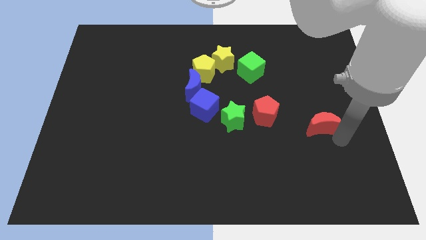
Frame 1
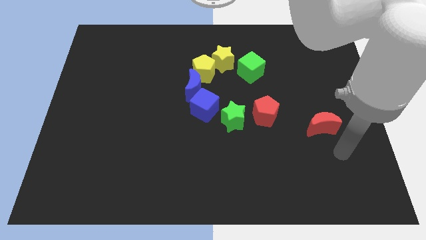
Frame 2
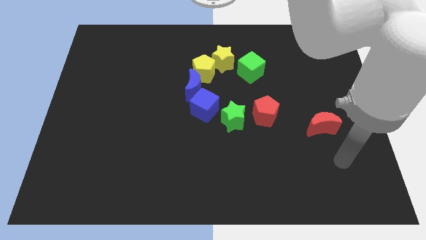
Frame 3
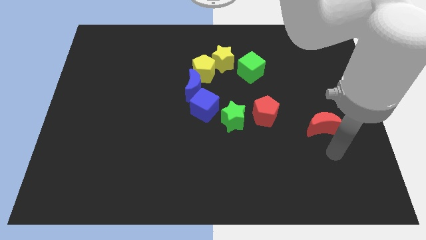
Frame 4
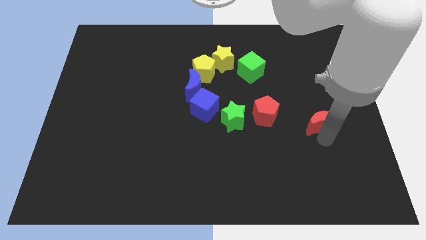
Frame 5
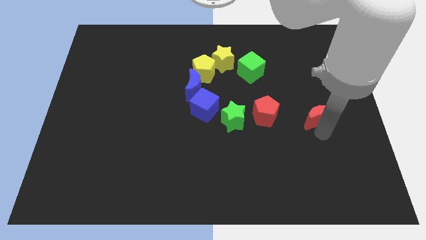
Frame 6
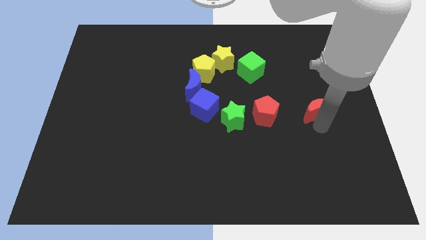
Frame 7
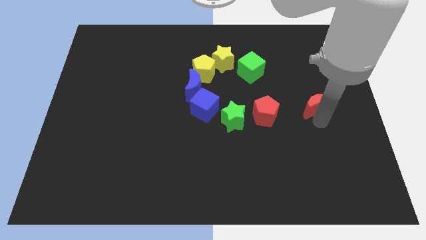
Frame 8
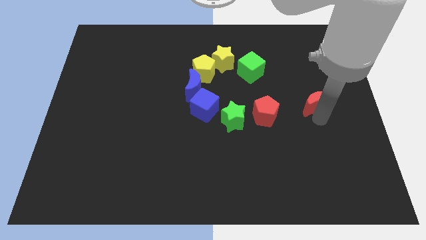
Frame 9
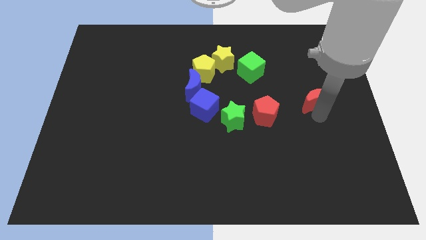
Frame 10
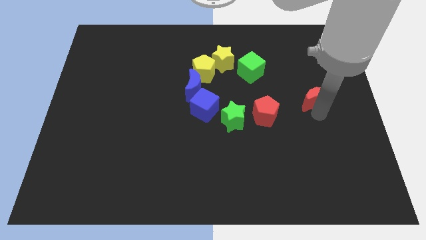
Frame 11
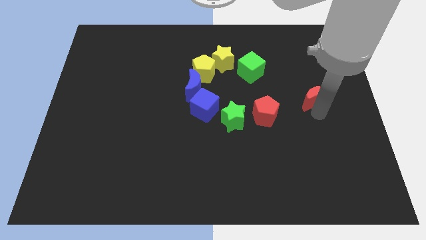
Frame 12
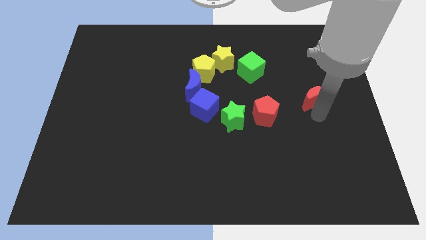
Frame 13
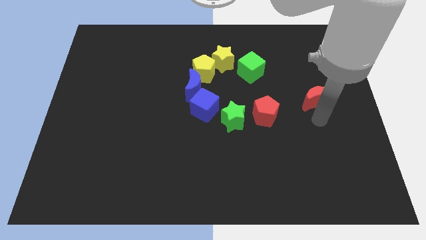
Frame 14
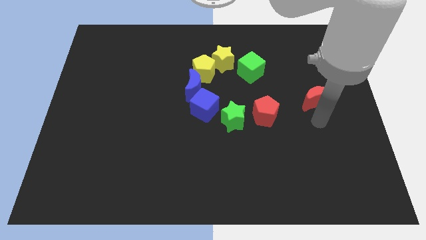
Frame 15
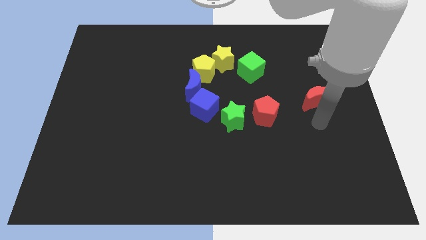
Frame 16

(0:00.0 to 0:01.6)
push the red crescent slightly upwards

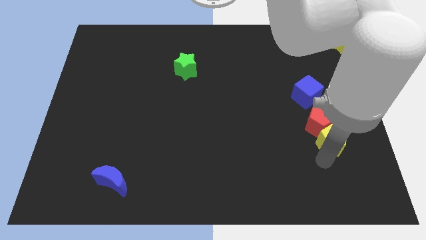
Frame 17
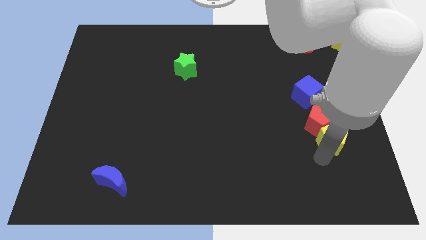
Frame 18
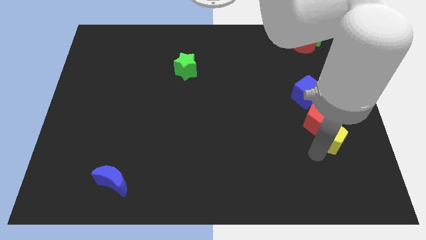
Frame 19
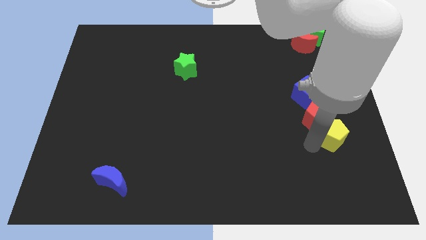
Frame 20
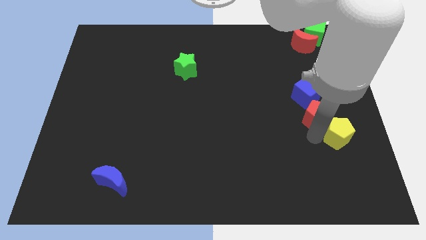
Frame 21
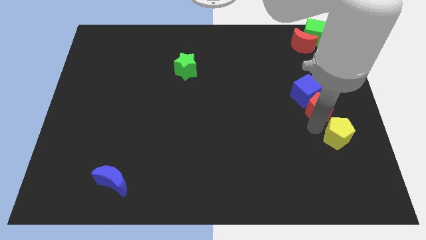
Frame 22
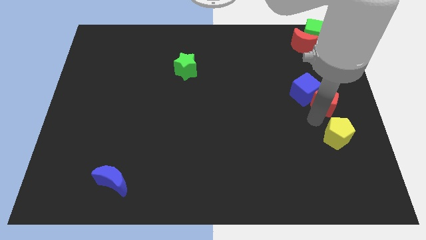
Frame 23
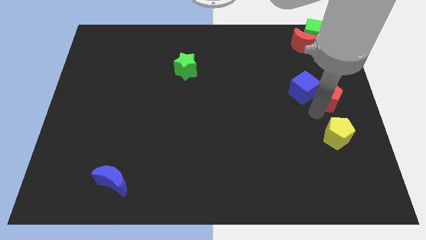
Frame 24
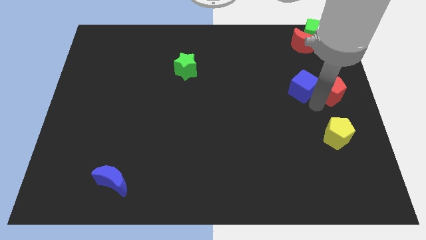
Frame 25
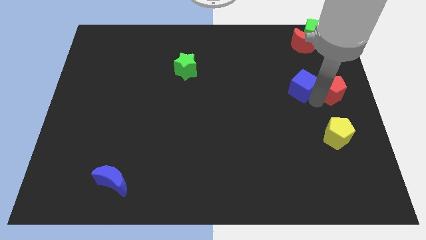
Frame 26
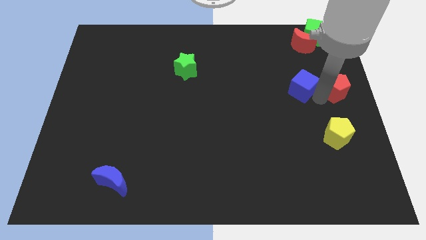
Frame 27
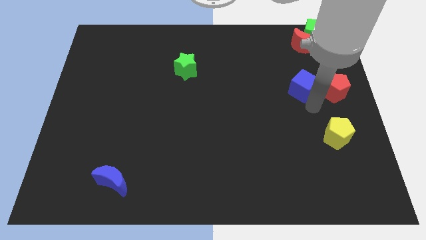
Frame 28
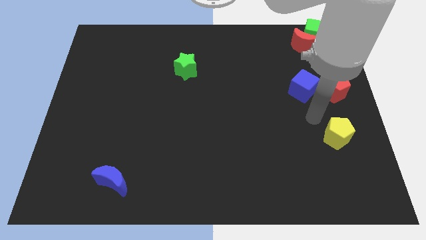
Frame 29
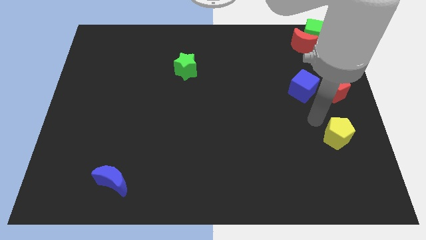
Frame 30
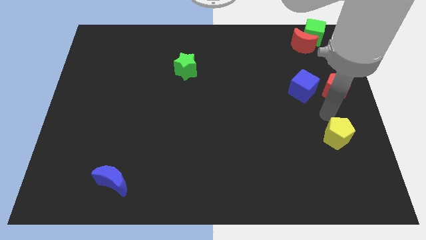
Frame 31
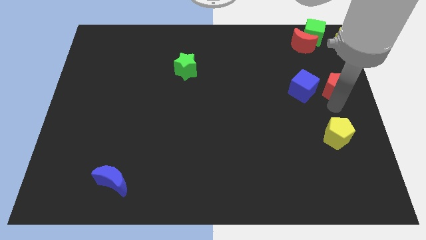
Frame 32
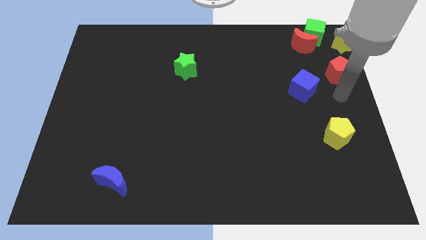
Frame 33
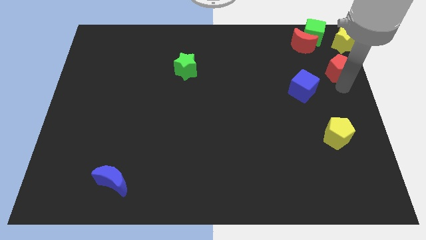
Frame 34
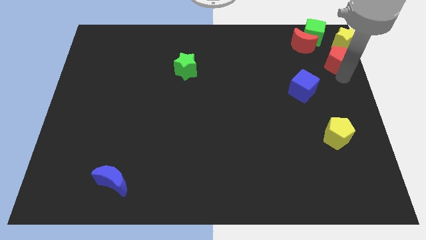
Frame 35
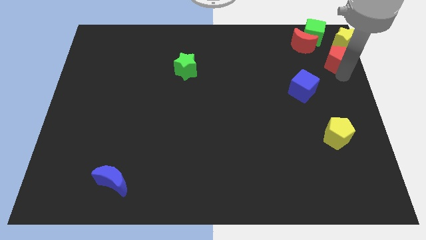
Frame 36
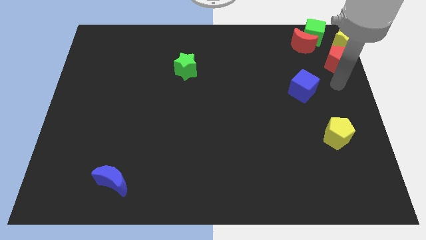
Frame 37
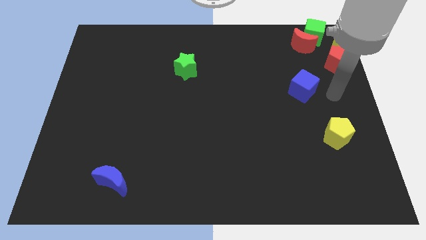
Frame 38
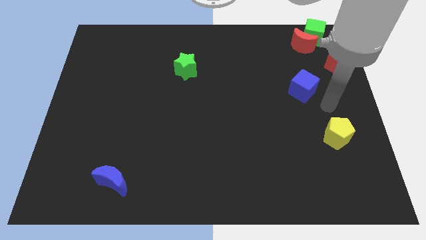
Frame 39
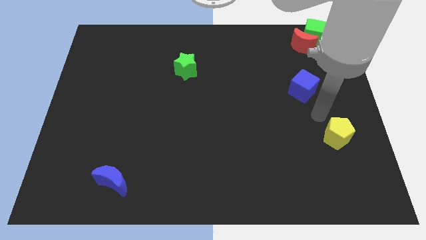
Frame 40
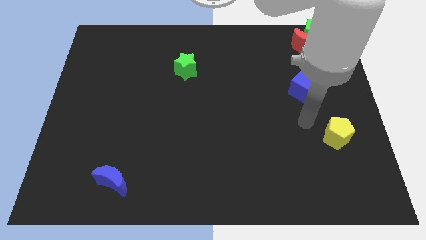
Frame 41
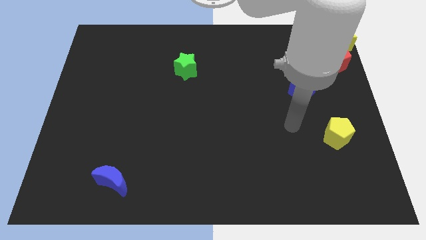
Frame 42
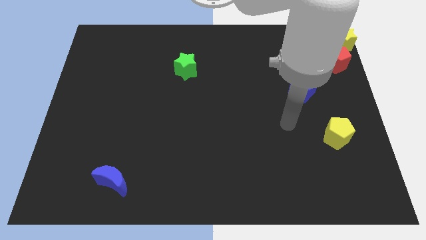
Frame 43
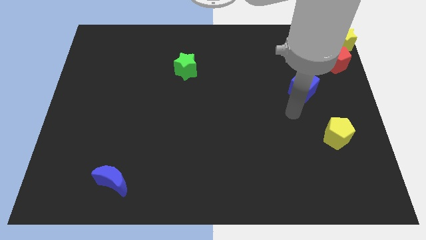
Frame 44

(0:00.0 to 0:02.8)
place the red pentagon below the yellow star

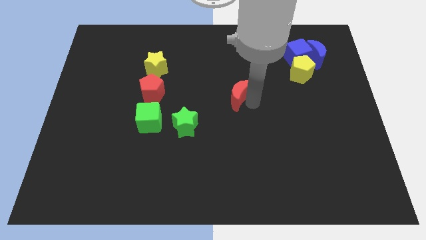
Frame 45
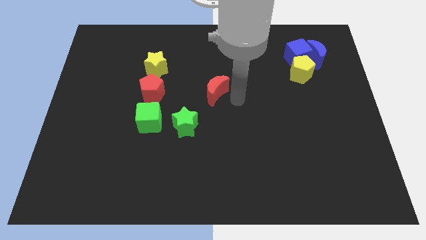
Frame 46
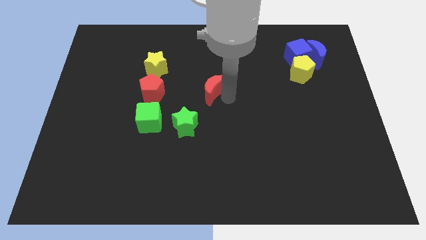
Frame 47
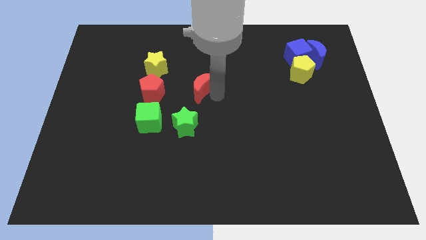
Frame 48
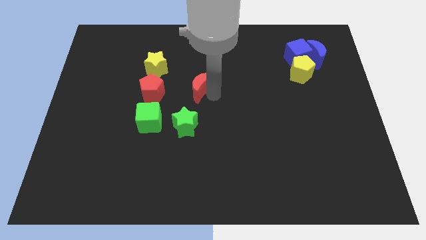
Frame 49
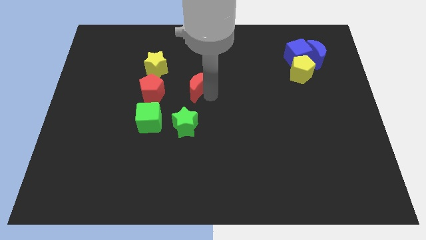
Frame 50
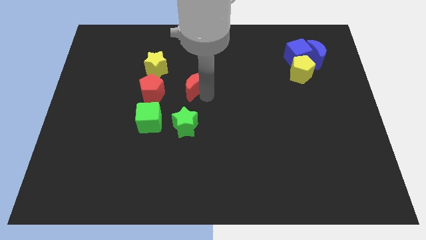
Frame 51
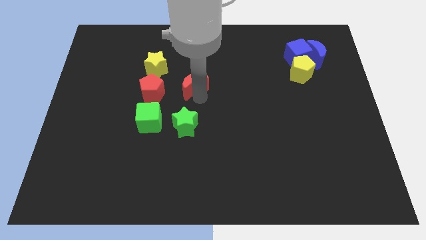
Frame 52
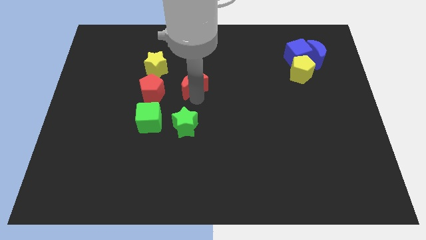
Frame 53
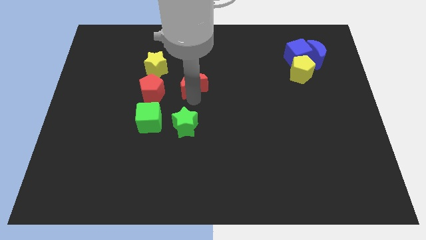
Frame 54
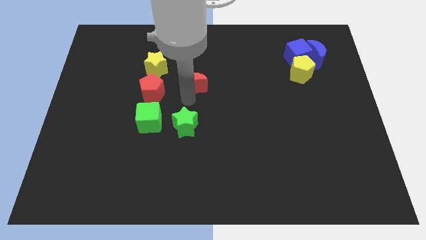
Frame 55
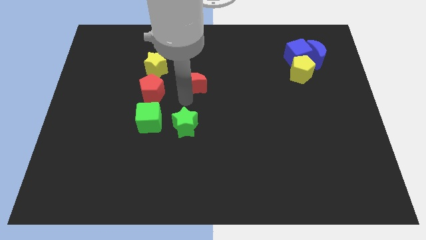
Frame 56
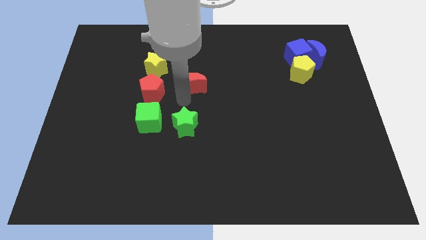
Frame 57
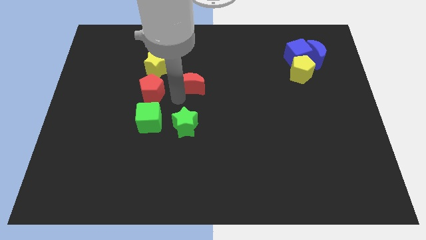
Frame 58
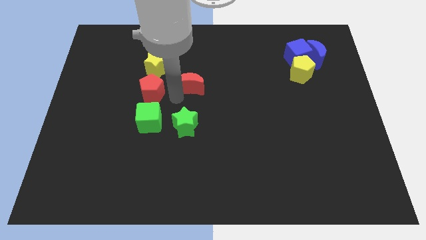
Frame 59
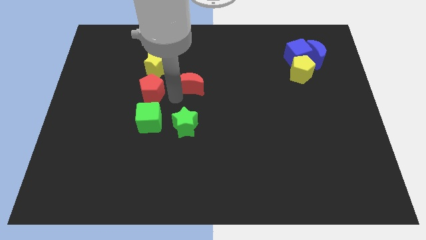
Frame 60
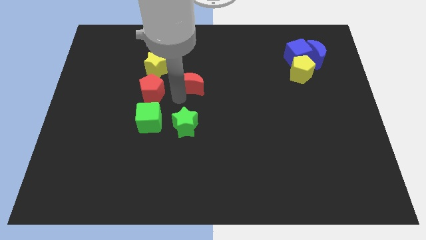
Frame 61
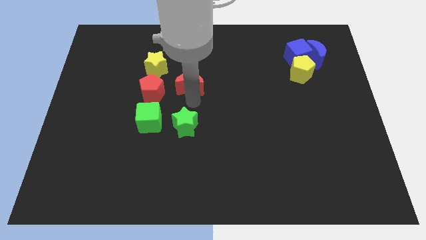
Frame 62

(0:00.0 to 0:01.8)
put the red crescent on the right side of the red pentagon

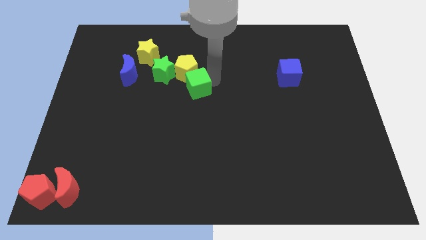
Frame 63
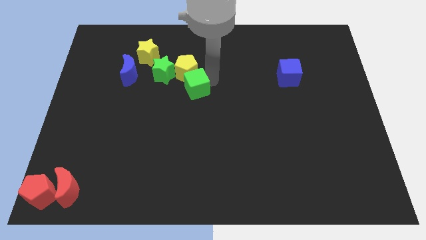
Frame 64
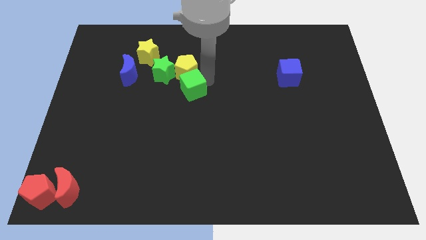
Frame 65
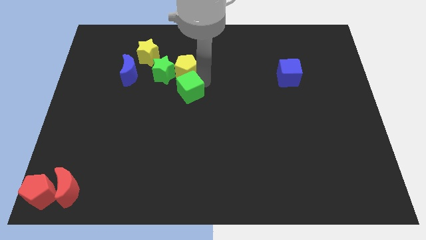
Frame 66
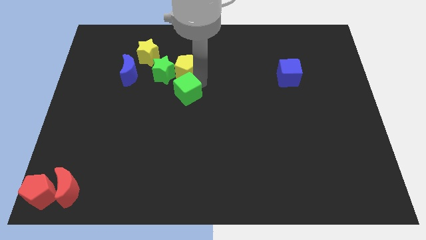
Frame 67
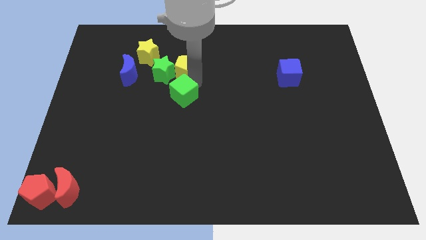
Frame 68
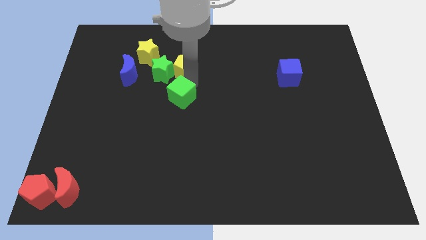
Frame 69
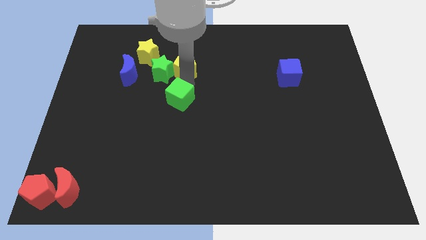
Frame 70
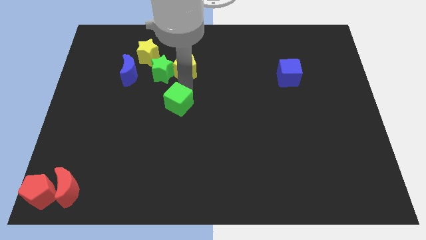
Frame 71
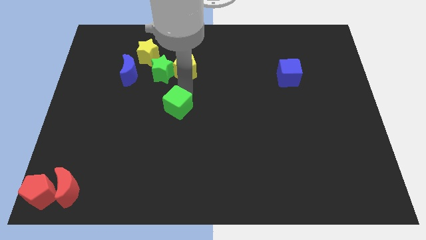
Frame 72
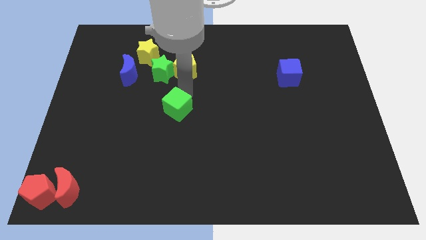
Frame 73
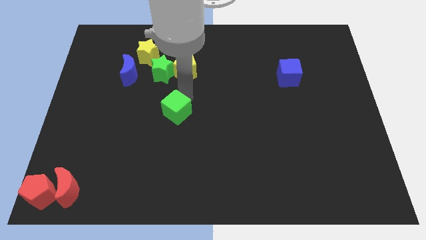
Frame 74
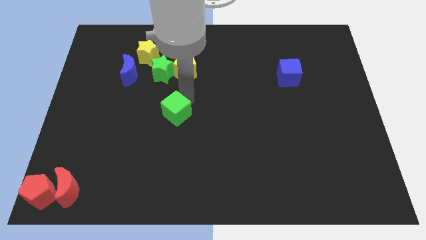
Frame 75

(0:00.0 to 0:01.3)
push the green cube below the yellow pentagon

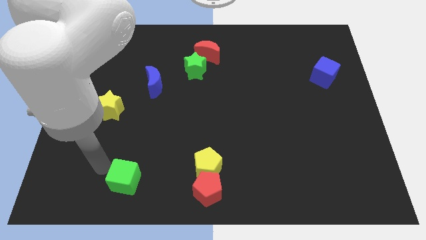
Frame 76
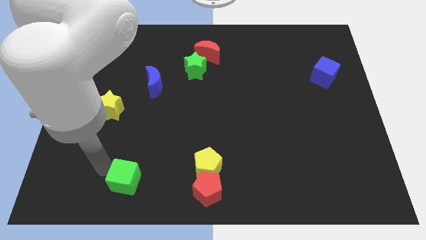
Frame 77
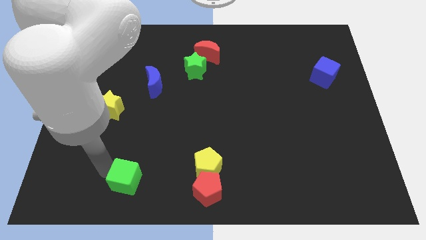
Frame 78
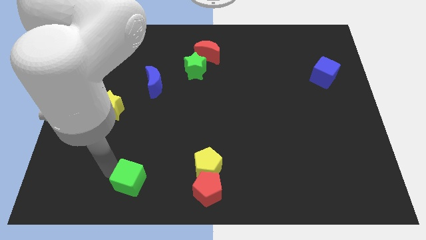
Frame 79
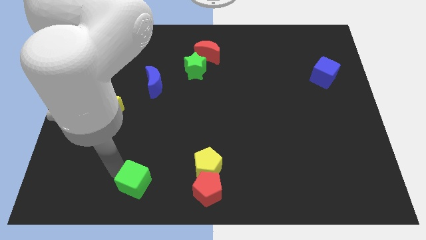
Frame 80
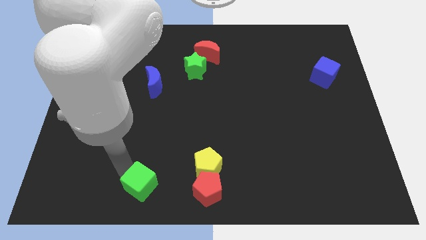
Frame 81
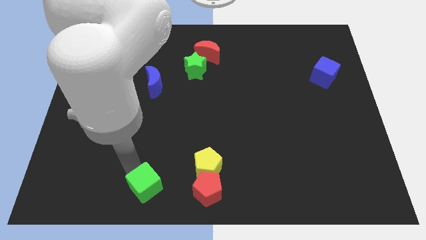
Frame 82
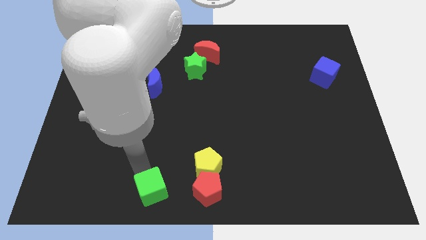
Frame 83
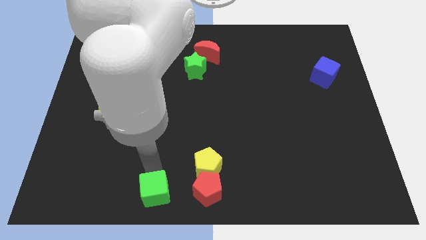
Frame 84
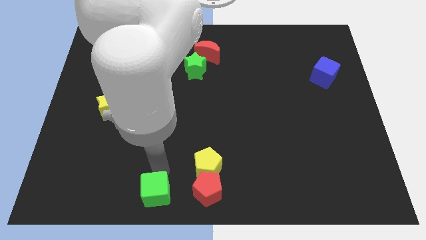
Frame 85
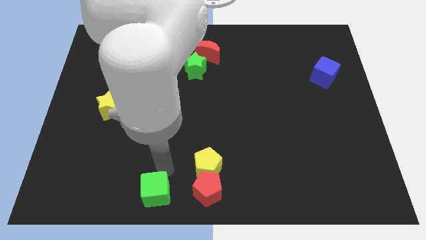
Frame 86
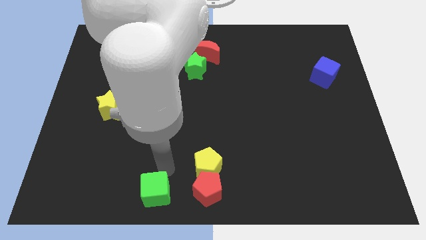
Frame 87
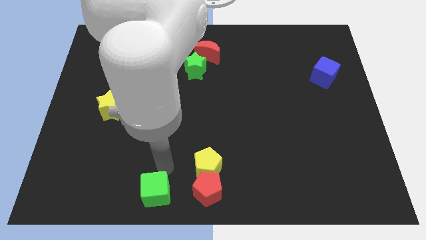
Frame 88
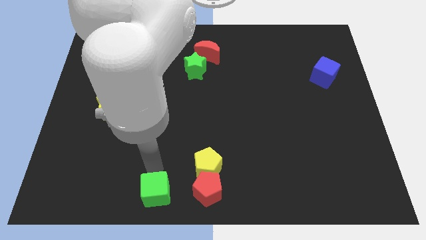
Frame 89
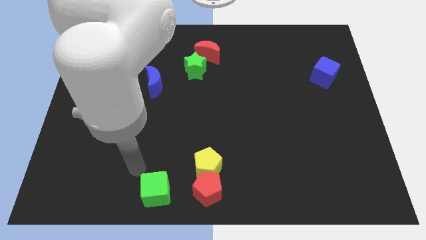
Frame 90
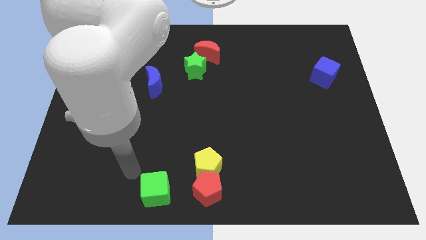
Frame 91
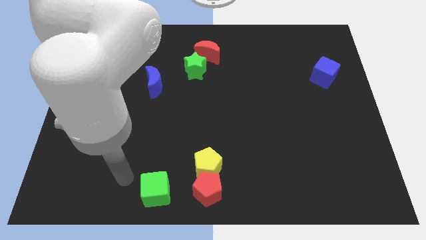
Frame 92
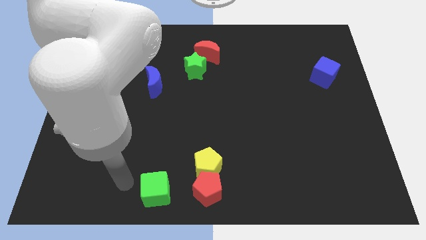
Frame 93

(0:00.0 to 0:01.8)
slide the green cube towards the red pentagon
